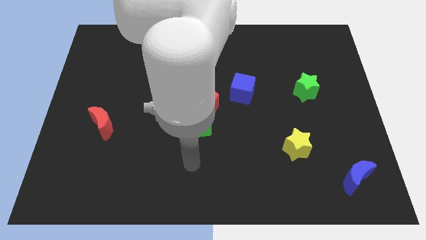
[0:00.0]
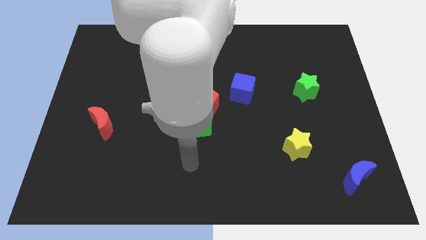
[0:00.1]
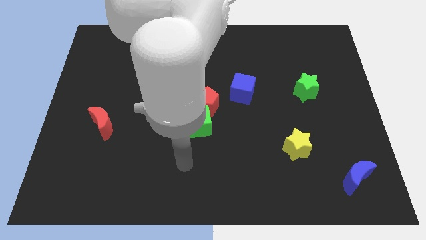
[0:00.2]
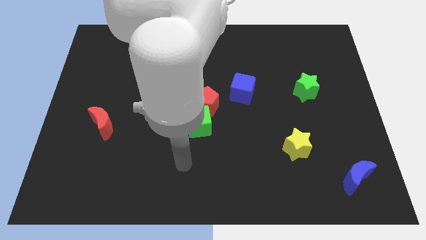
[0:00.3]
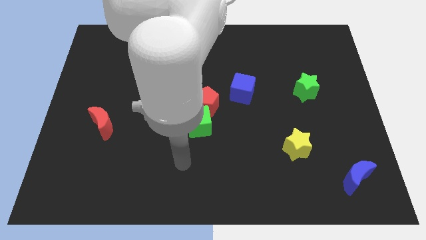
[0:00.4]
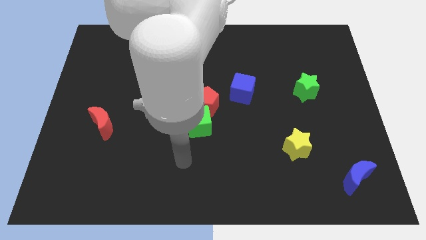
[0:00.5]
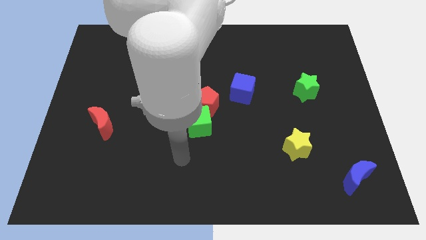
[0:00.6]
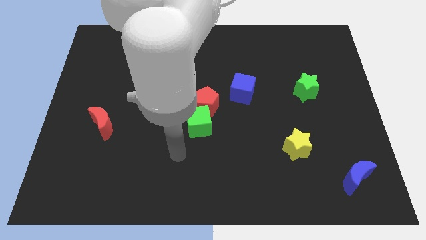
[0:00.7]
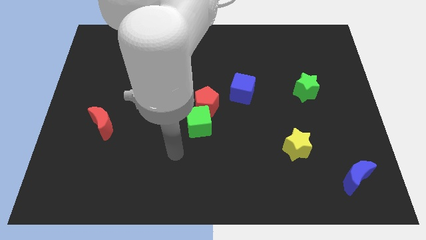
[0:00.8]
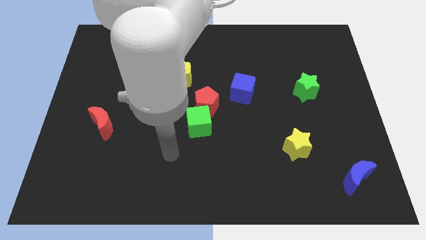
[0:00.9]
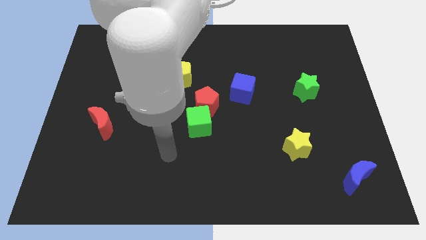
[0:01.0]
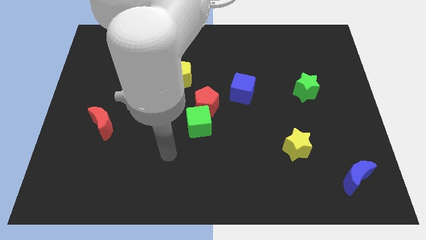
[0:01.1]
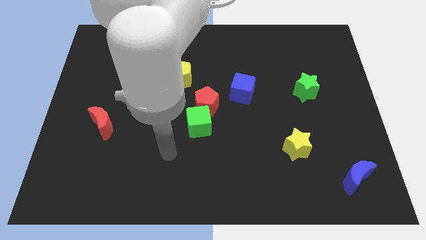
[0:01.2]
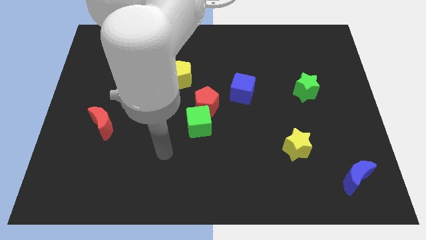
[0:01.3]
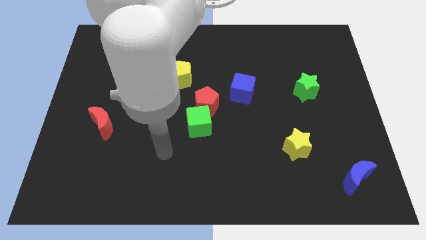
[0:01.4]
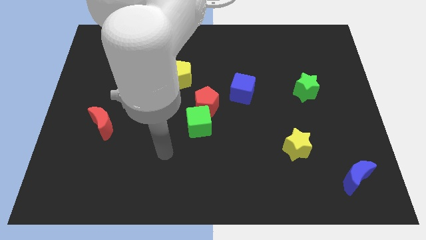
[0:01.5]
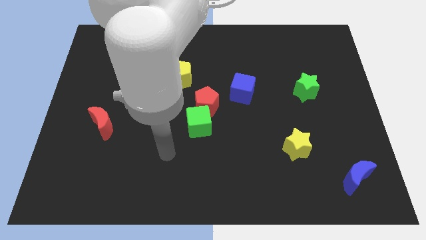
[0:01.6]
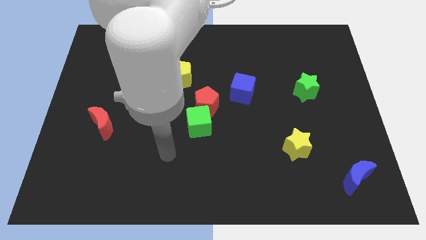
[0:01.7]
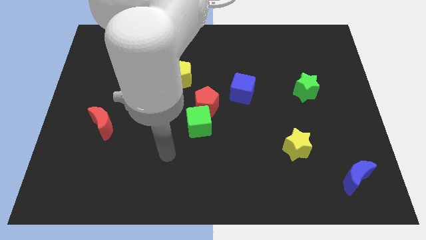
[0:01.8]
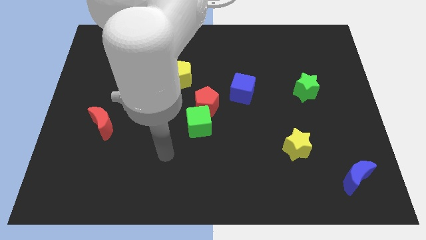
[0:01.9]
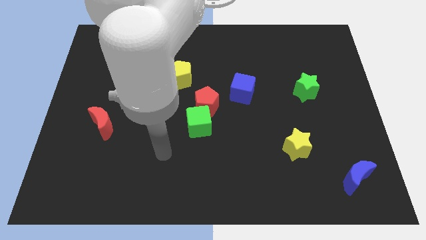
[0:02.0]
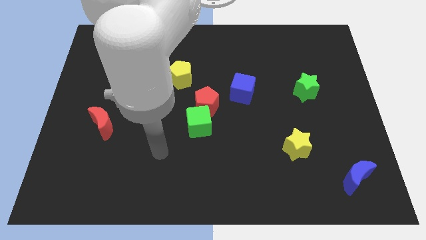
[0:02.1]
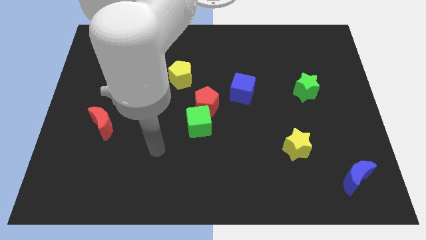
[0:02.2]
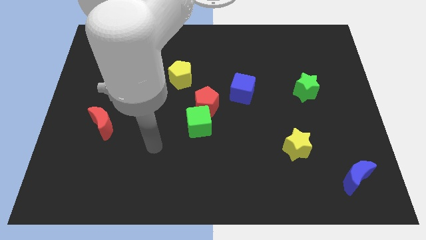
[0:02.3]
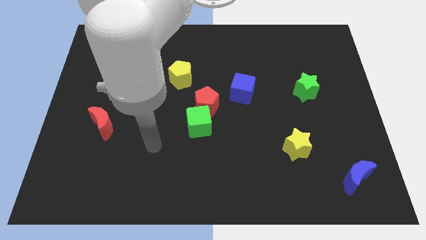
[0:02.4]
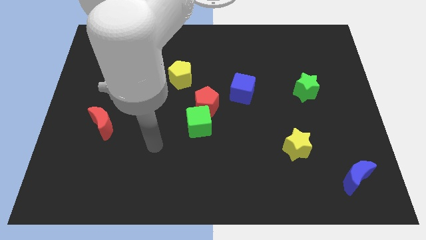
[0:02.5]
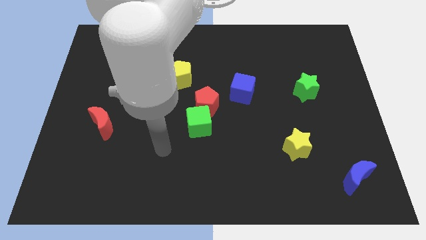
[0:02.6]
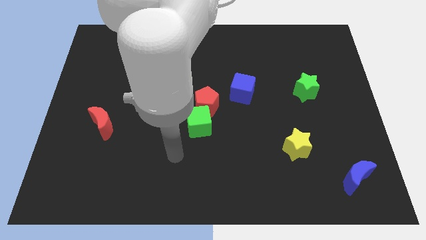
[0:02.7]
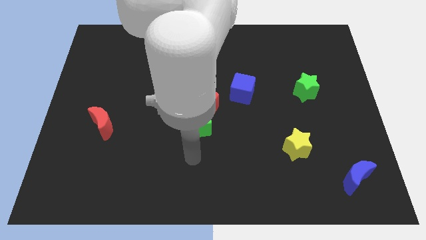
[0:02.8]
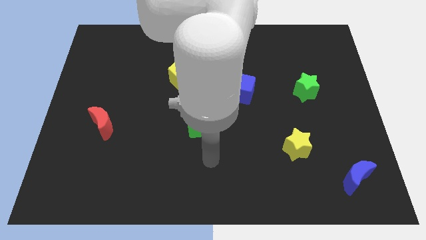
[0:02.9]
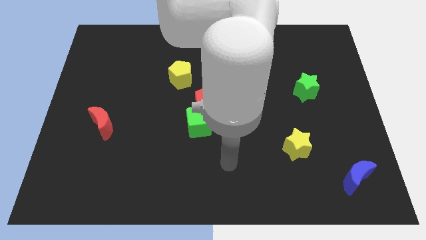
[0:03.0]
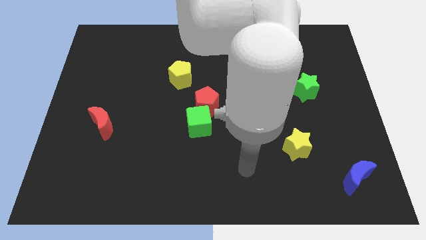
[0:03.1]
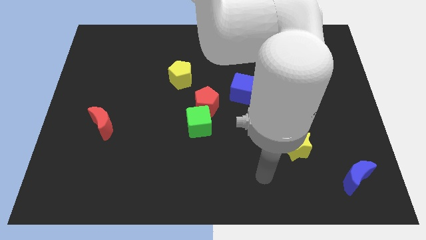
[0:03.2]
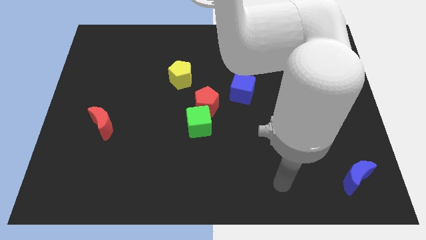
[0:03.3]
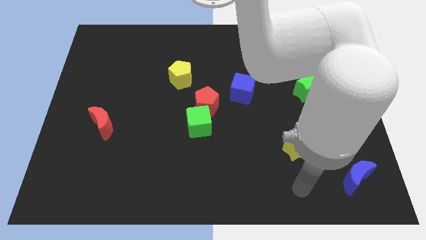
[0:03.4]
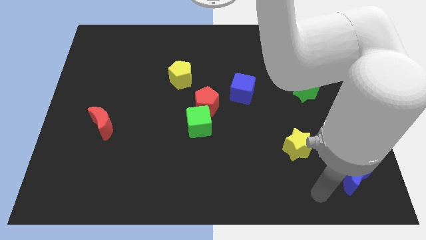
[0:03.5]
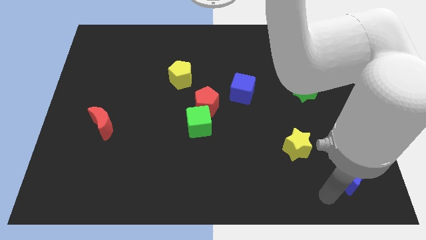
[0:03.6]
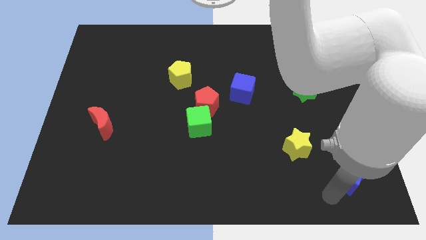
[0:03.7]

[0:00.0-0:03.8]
move yourself close to the blue crescent

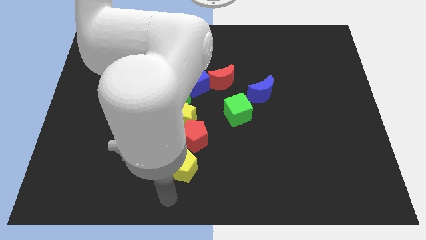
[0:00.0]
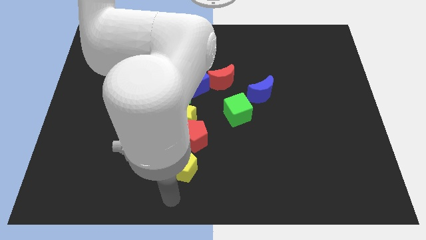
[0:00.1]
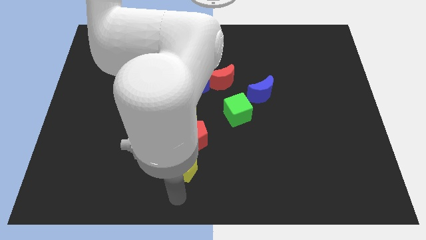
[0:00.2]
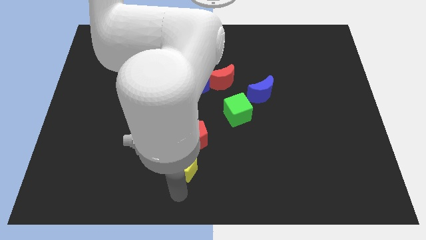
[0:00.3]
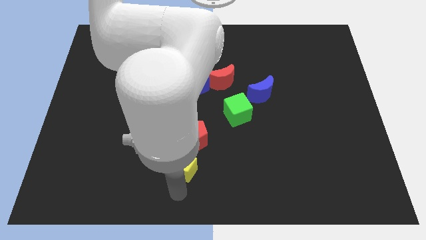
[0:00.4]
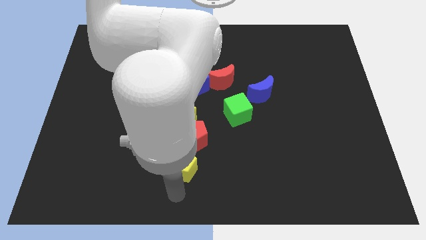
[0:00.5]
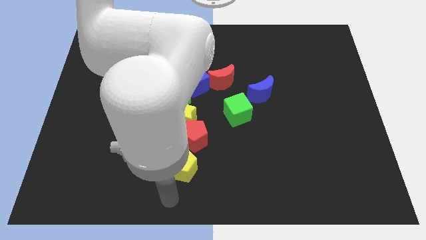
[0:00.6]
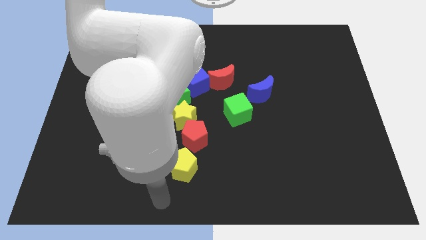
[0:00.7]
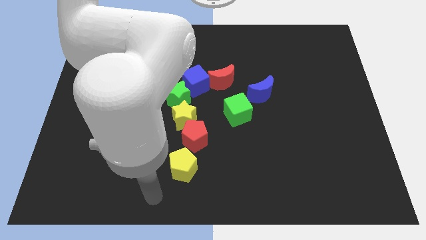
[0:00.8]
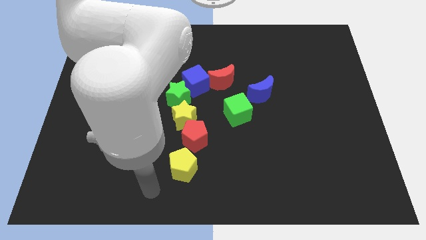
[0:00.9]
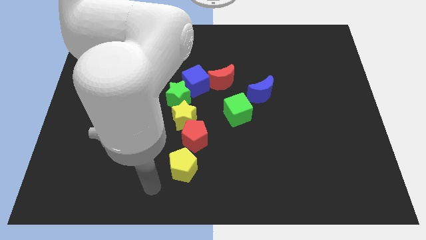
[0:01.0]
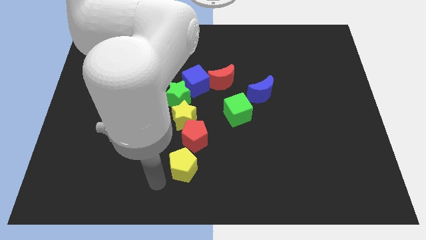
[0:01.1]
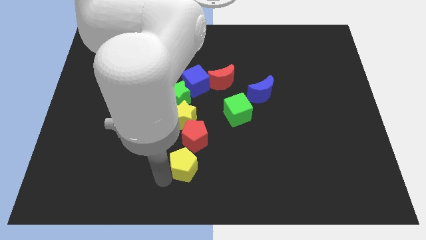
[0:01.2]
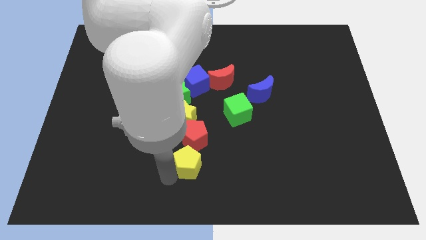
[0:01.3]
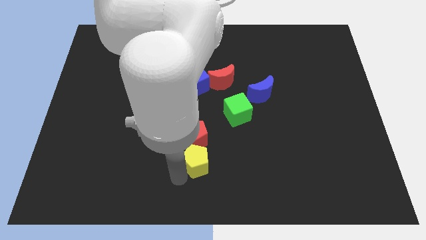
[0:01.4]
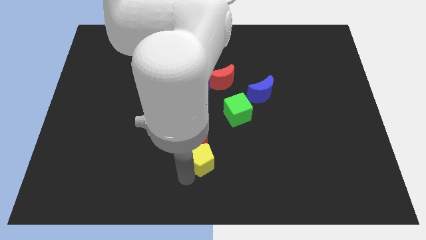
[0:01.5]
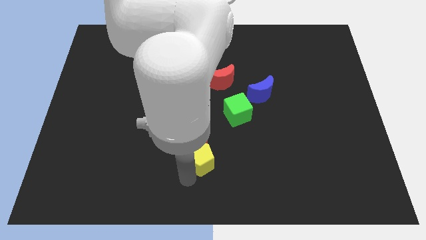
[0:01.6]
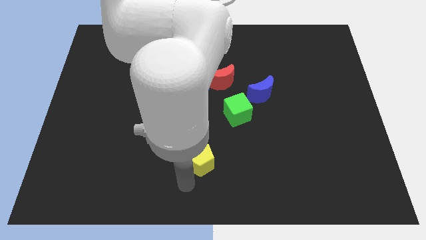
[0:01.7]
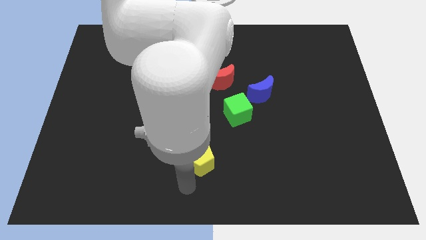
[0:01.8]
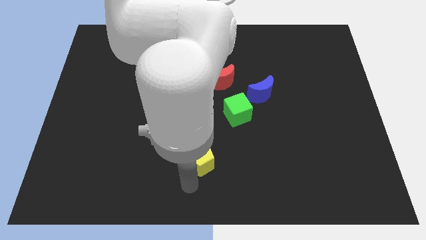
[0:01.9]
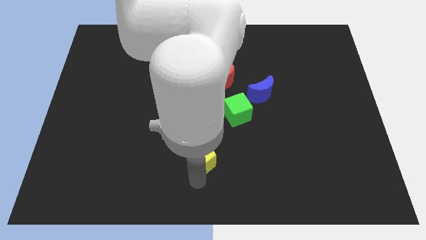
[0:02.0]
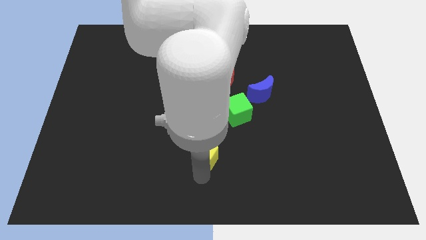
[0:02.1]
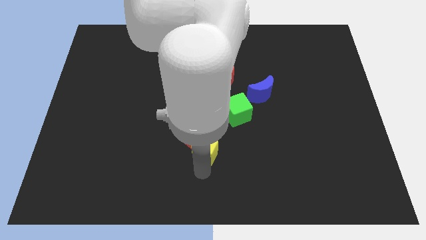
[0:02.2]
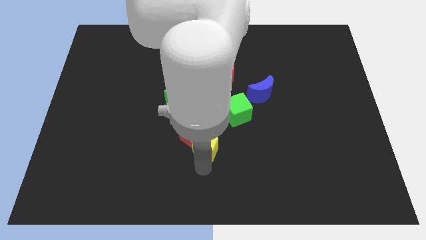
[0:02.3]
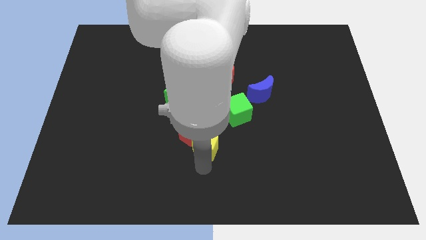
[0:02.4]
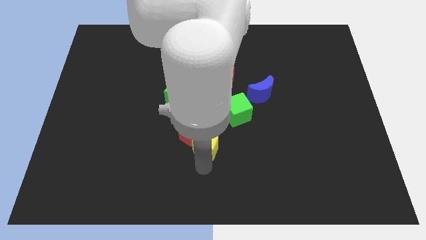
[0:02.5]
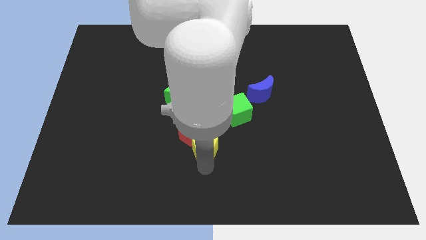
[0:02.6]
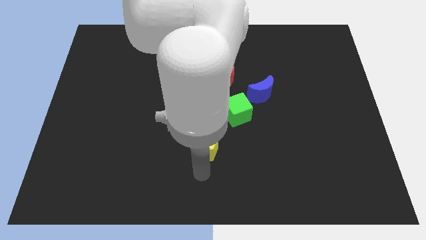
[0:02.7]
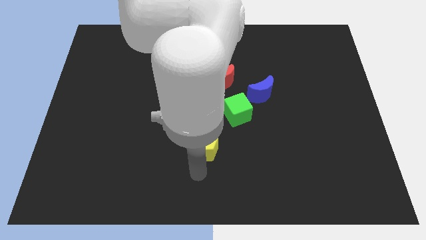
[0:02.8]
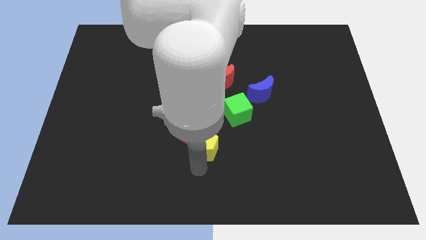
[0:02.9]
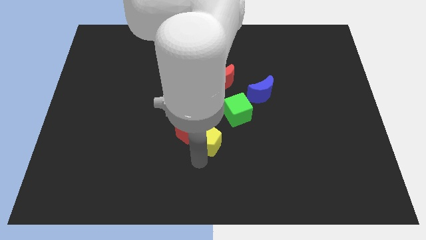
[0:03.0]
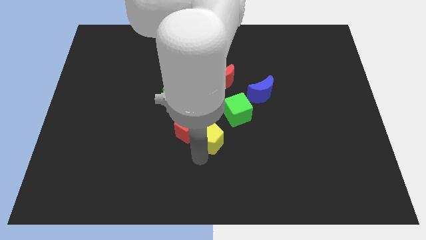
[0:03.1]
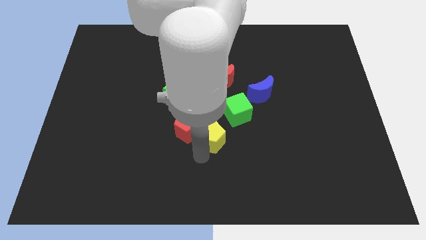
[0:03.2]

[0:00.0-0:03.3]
move yellow pentagon right below the red pentagon

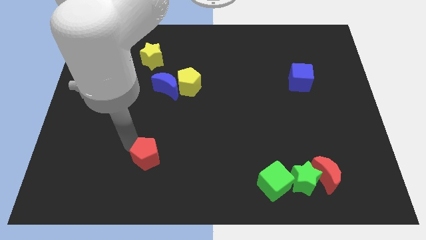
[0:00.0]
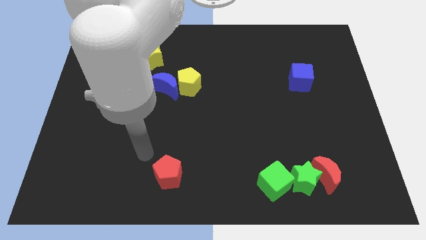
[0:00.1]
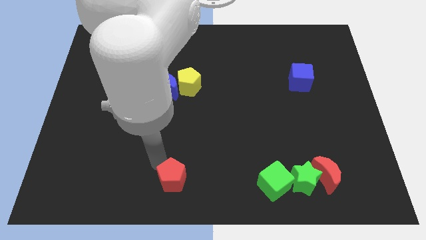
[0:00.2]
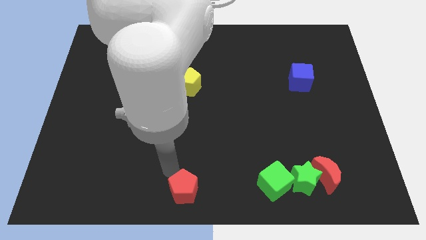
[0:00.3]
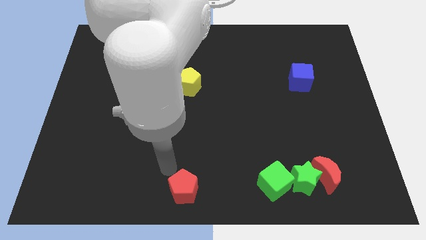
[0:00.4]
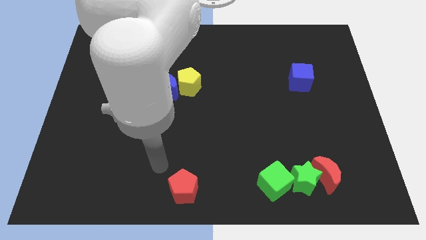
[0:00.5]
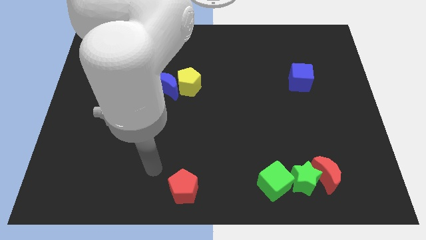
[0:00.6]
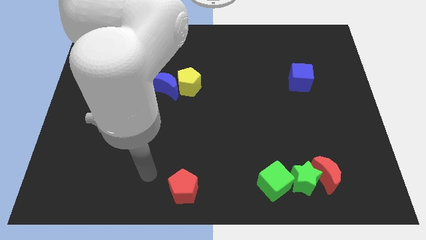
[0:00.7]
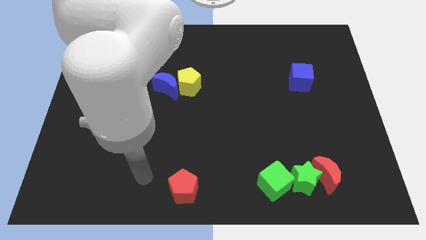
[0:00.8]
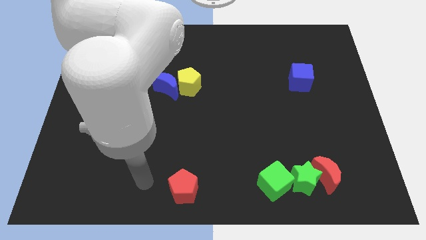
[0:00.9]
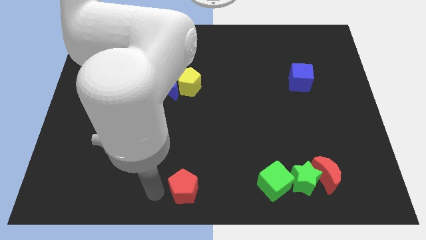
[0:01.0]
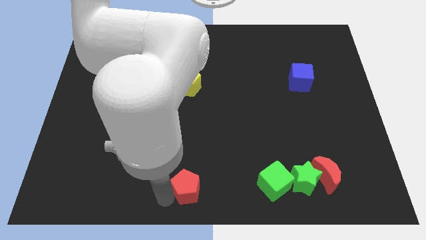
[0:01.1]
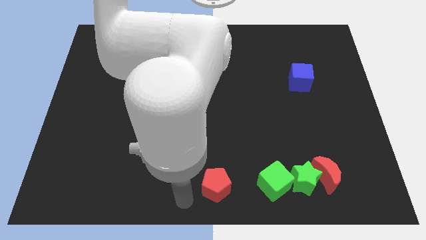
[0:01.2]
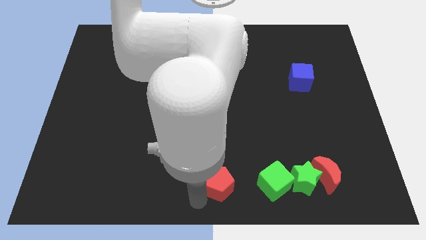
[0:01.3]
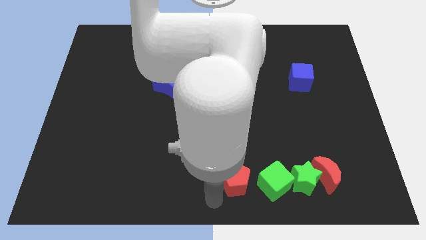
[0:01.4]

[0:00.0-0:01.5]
move the red pentagon close to the green cube

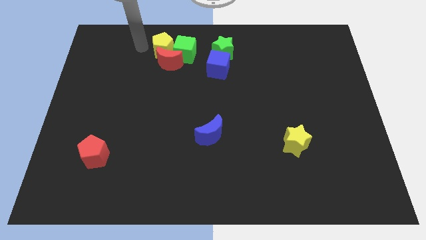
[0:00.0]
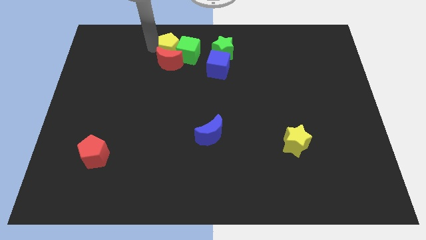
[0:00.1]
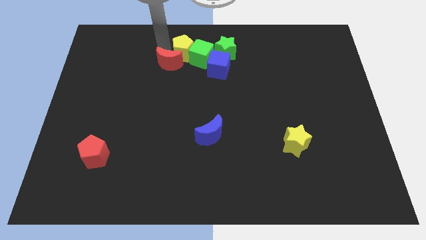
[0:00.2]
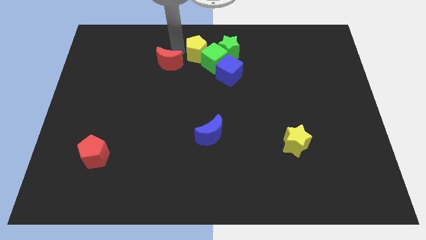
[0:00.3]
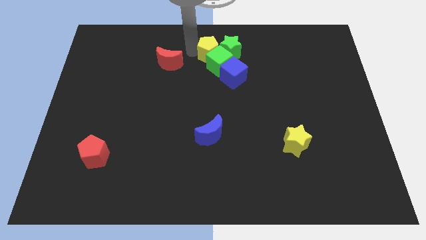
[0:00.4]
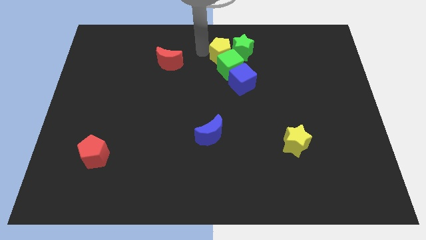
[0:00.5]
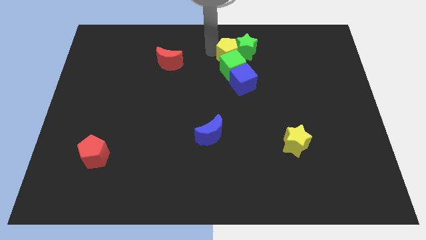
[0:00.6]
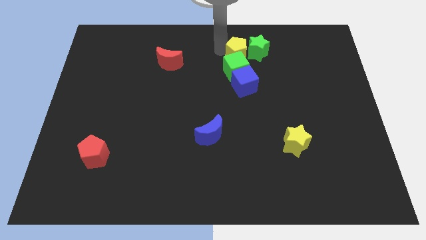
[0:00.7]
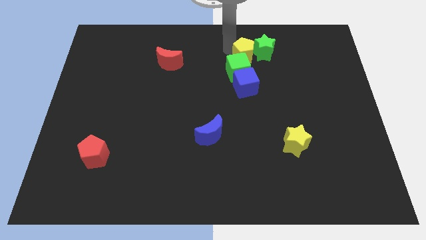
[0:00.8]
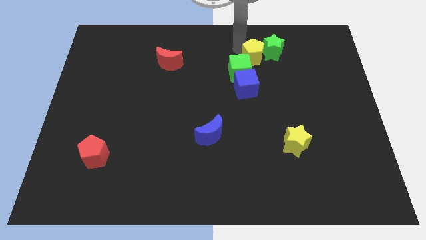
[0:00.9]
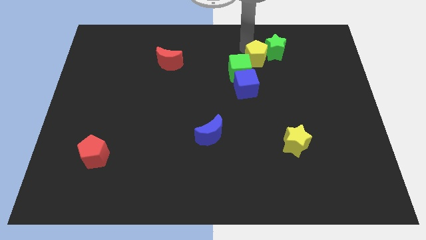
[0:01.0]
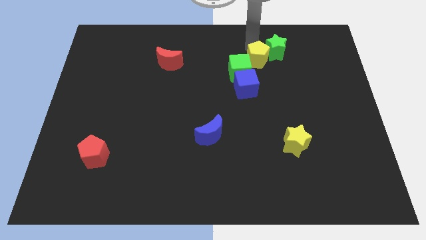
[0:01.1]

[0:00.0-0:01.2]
push the yellow pentagon into the green blocks
